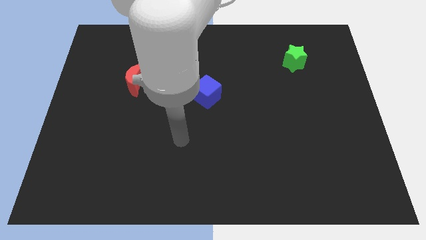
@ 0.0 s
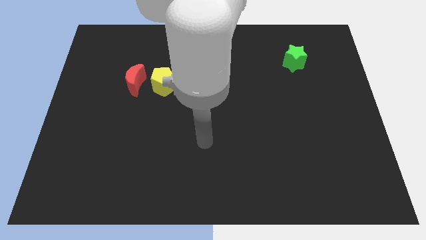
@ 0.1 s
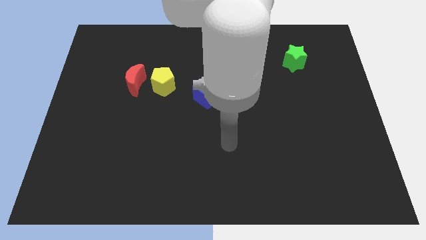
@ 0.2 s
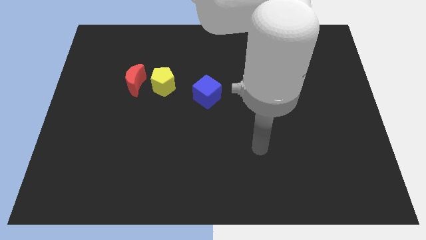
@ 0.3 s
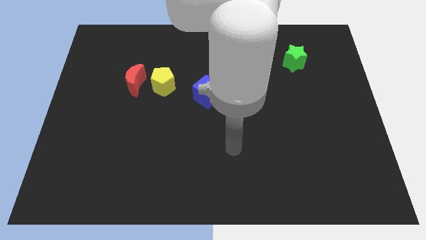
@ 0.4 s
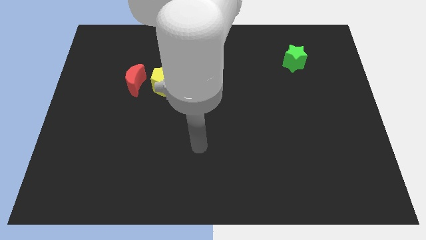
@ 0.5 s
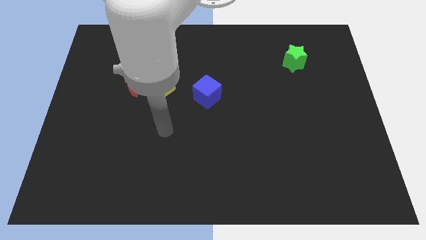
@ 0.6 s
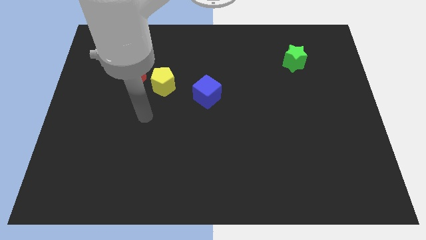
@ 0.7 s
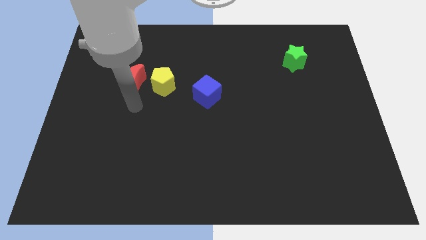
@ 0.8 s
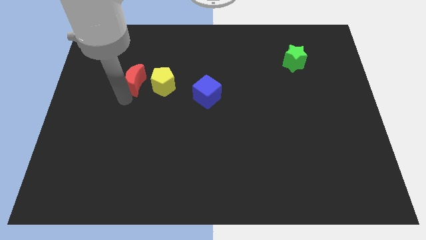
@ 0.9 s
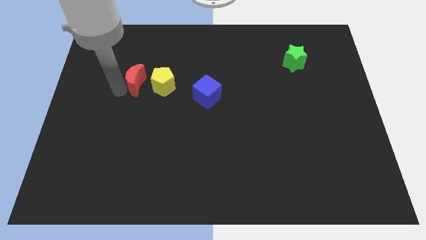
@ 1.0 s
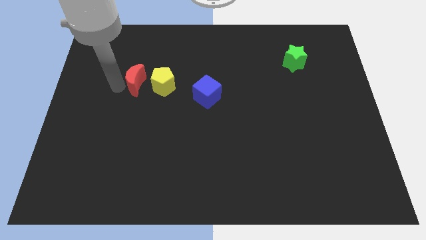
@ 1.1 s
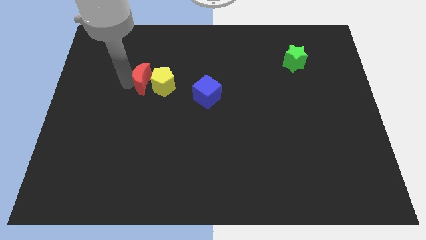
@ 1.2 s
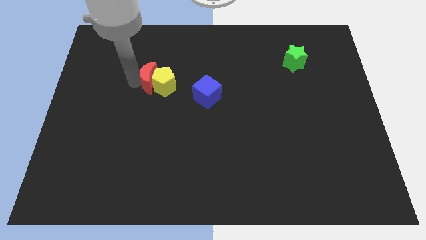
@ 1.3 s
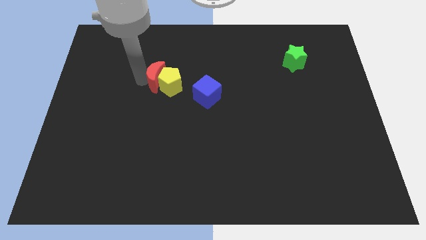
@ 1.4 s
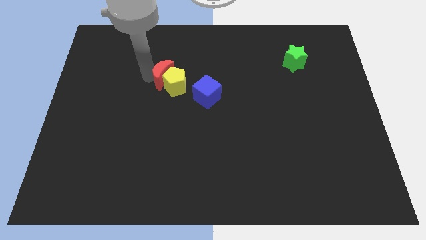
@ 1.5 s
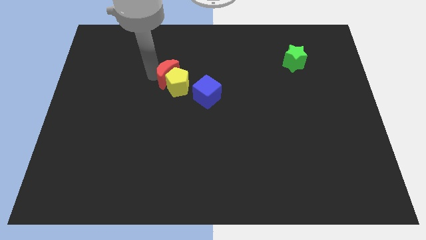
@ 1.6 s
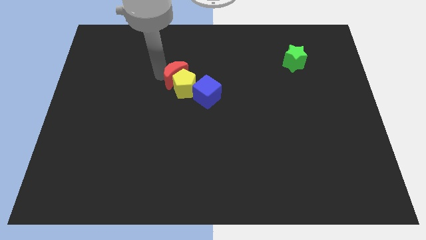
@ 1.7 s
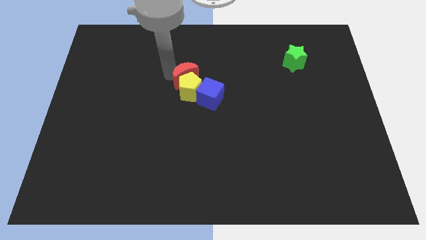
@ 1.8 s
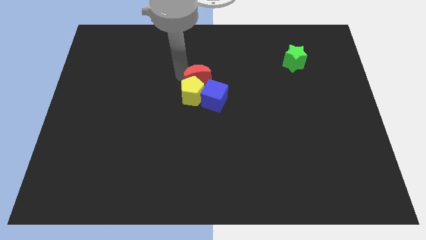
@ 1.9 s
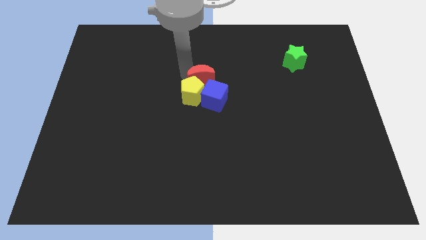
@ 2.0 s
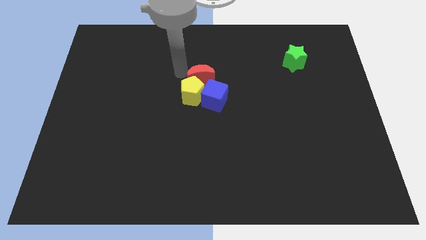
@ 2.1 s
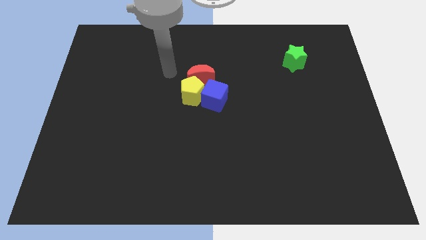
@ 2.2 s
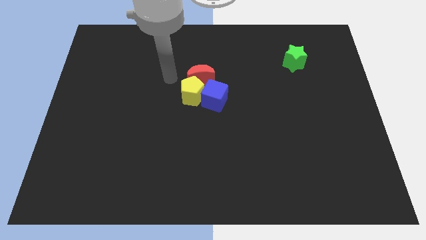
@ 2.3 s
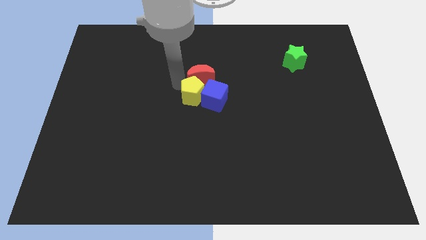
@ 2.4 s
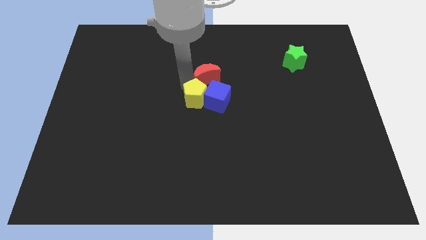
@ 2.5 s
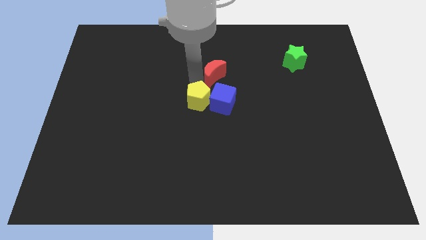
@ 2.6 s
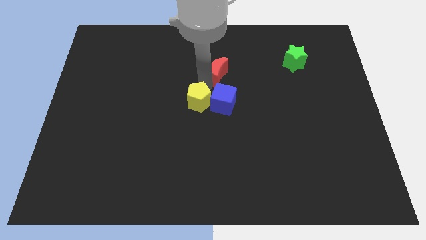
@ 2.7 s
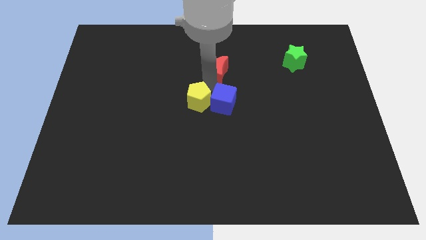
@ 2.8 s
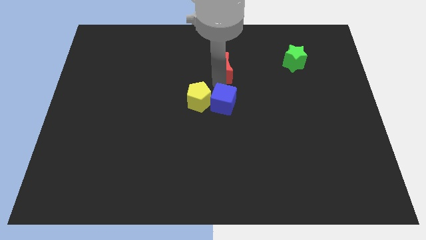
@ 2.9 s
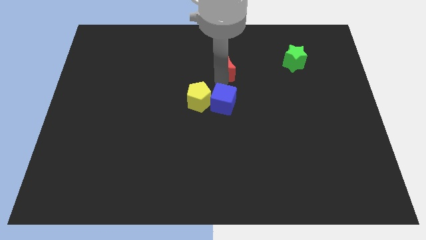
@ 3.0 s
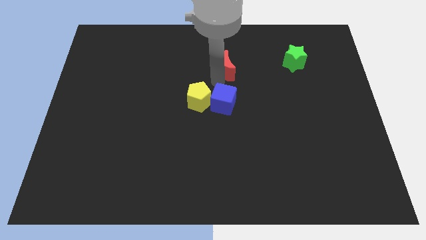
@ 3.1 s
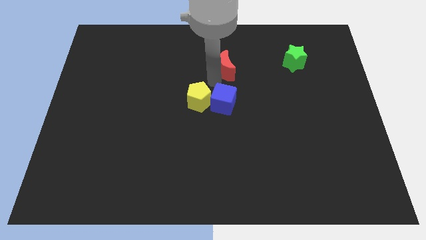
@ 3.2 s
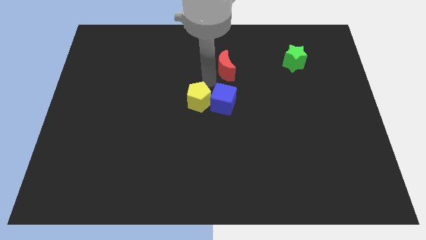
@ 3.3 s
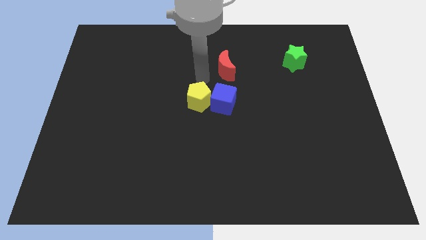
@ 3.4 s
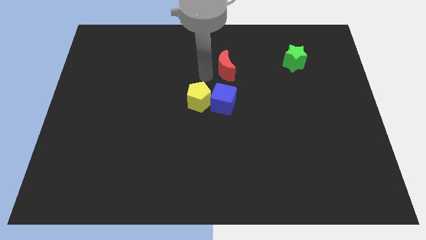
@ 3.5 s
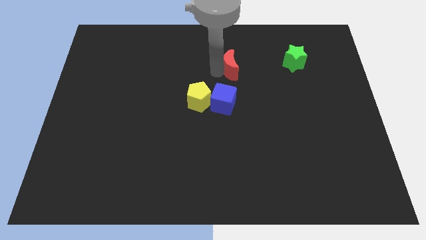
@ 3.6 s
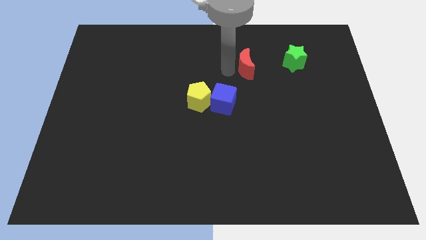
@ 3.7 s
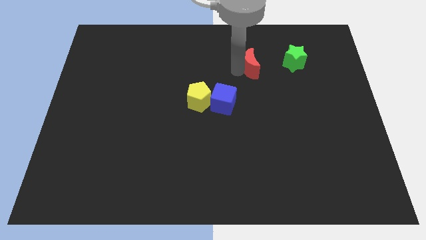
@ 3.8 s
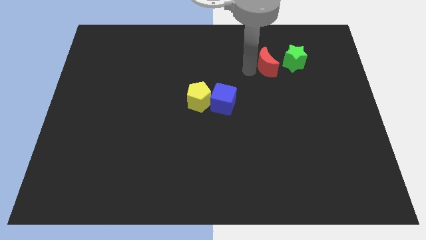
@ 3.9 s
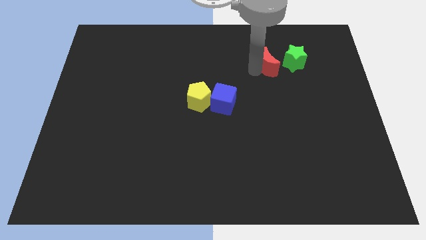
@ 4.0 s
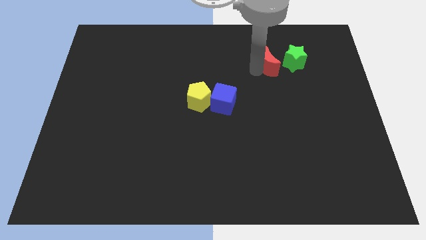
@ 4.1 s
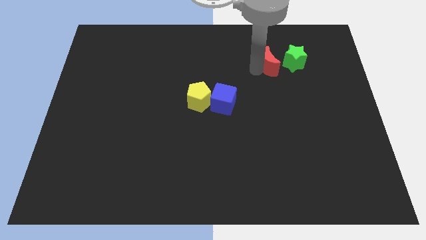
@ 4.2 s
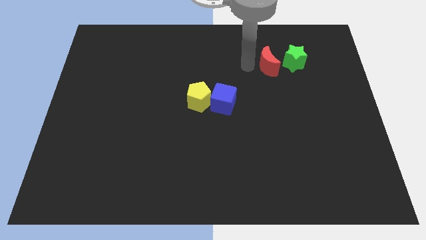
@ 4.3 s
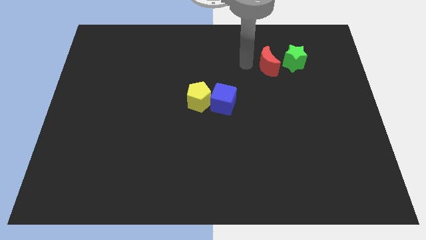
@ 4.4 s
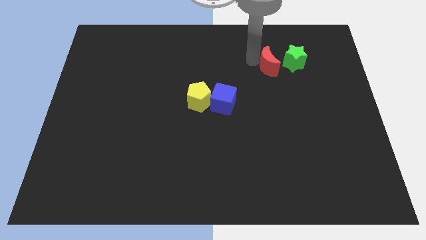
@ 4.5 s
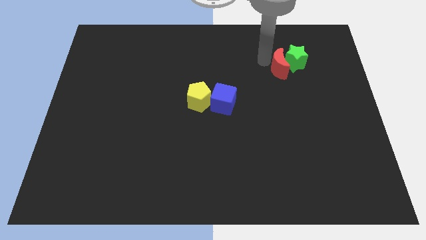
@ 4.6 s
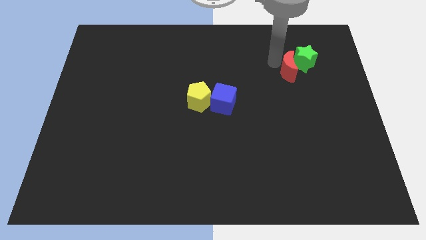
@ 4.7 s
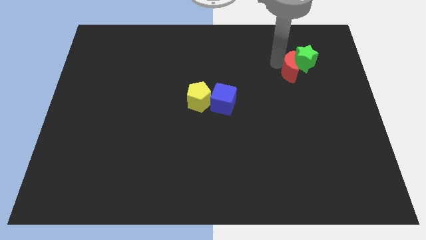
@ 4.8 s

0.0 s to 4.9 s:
move the red block next to the star

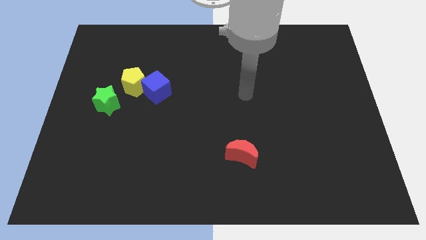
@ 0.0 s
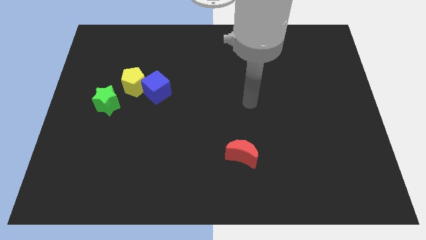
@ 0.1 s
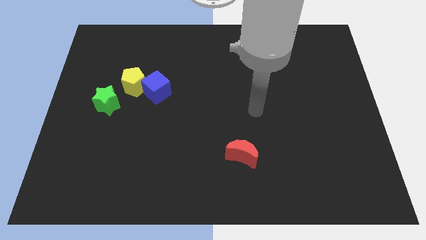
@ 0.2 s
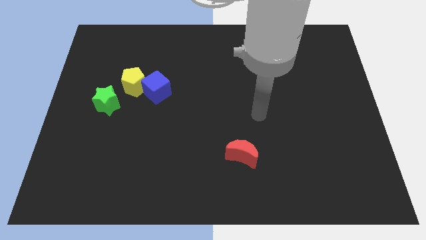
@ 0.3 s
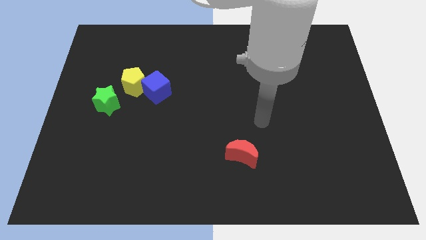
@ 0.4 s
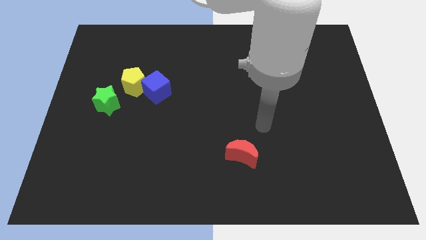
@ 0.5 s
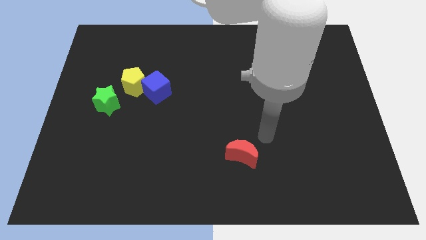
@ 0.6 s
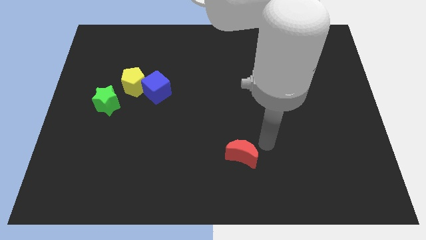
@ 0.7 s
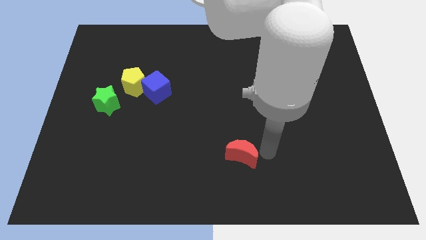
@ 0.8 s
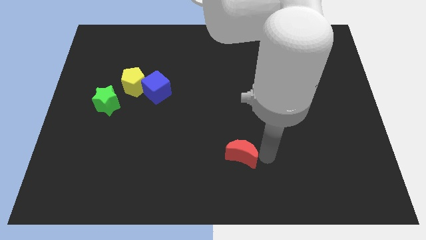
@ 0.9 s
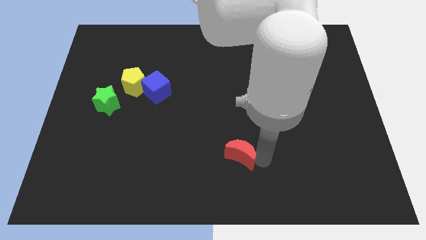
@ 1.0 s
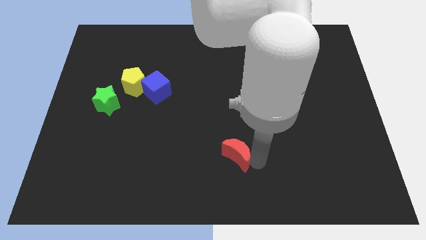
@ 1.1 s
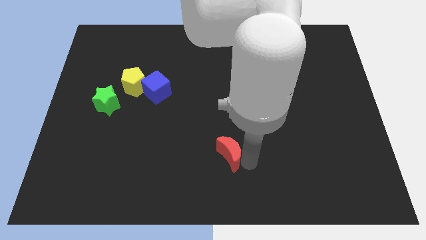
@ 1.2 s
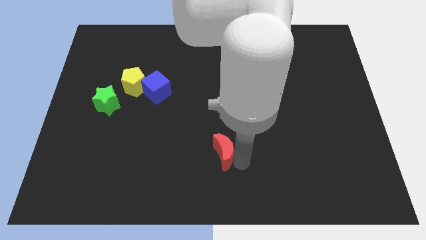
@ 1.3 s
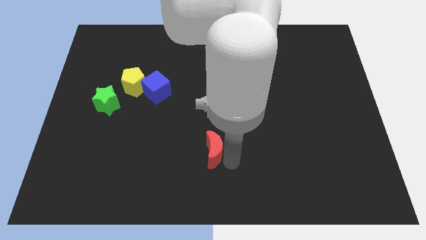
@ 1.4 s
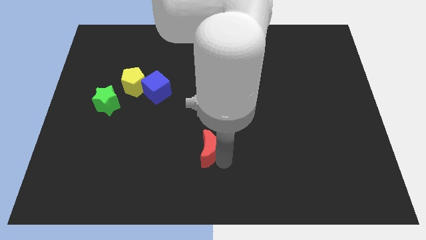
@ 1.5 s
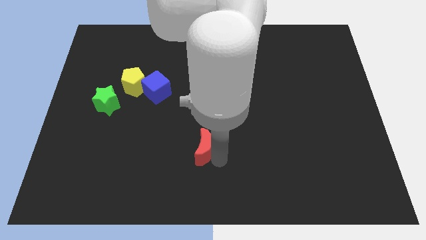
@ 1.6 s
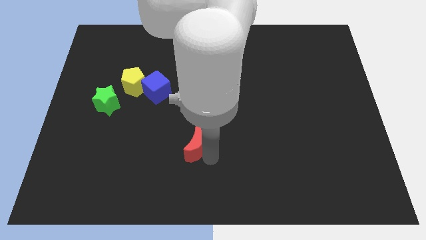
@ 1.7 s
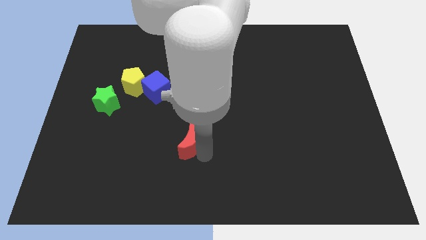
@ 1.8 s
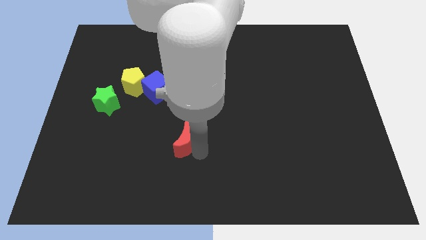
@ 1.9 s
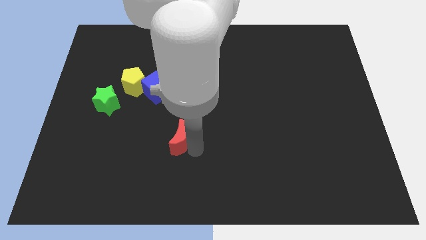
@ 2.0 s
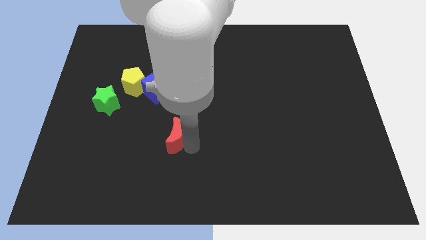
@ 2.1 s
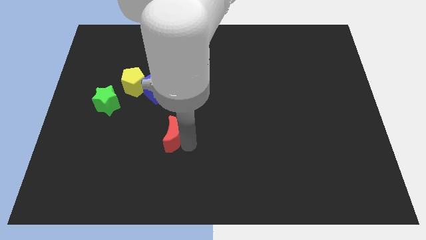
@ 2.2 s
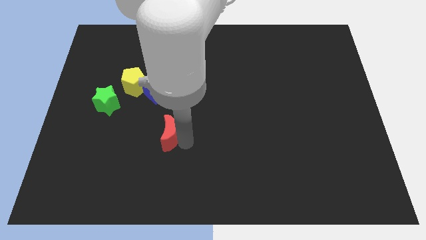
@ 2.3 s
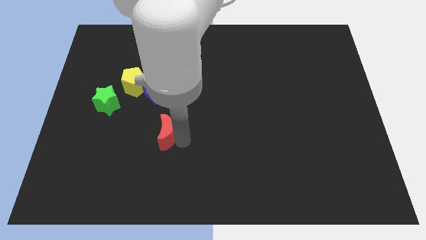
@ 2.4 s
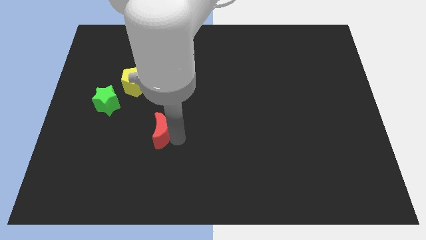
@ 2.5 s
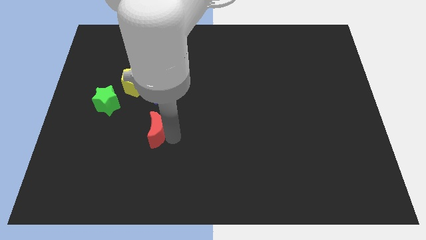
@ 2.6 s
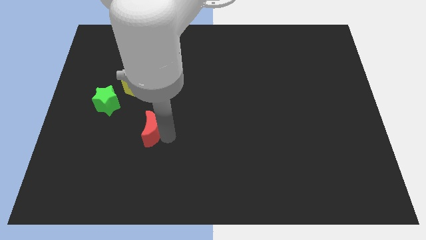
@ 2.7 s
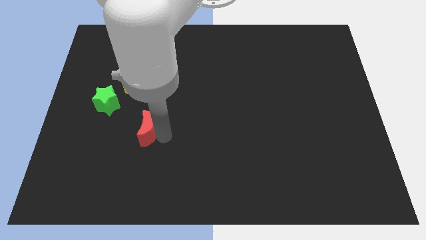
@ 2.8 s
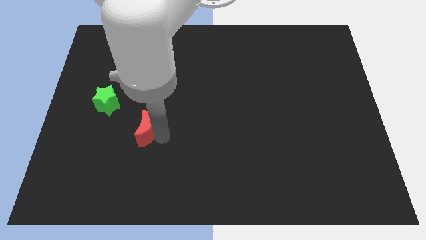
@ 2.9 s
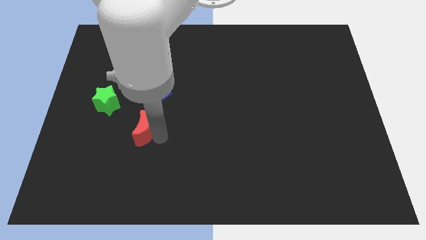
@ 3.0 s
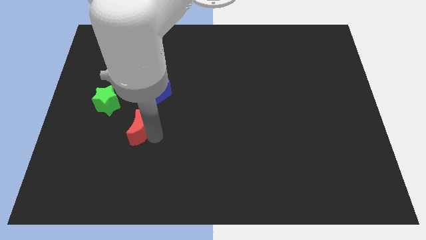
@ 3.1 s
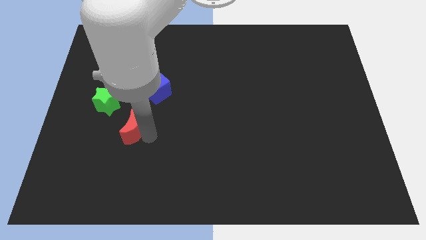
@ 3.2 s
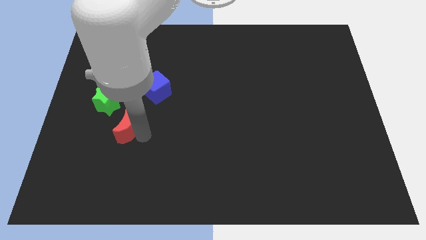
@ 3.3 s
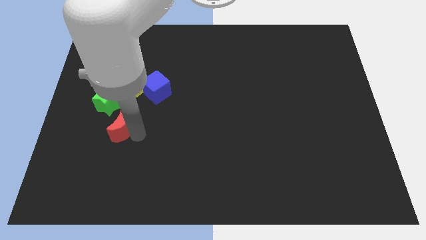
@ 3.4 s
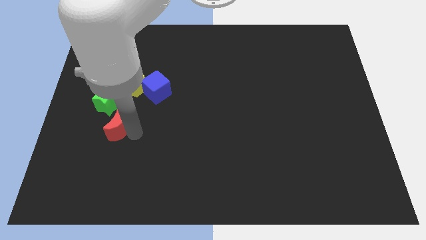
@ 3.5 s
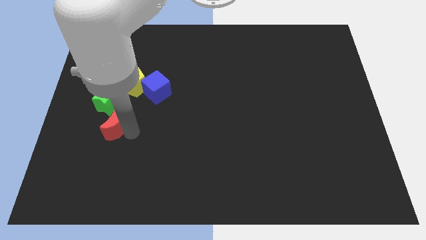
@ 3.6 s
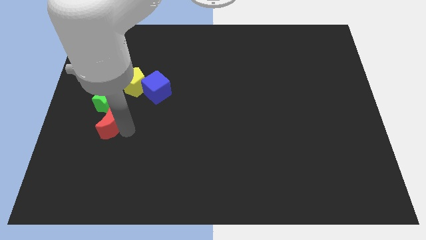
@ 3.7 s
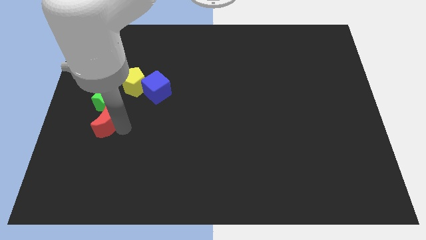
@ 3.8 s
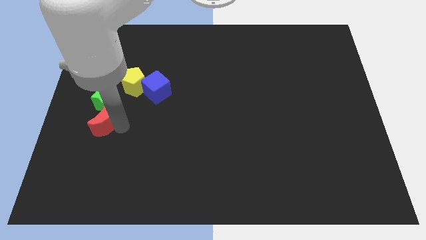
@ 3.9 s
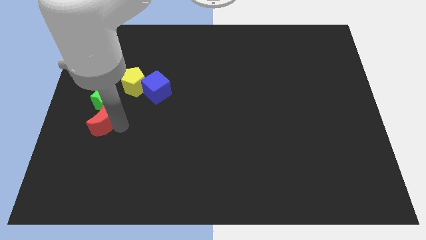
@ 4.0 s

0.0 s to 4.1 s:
slide the red moon next to the star
